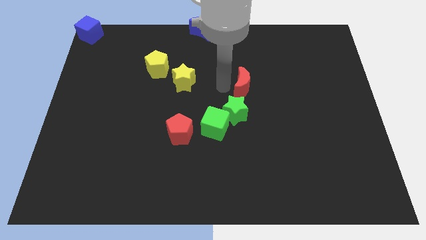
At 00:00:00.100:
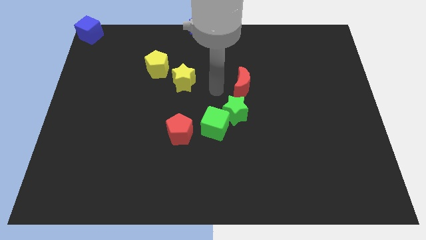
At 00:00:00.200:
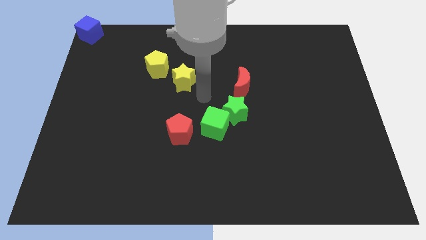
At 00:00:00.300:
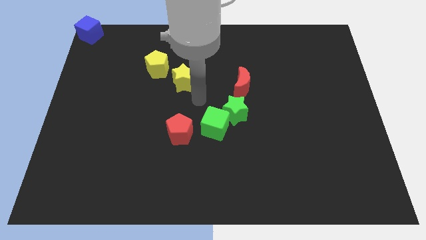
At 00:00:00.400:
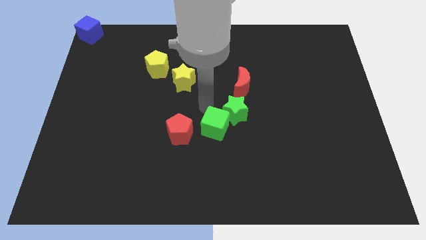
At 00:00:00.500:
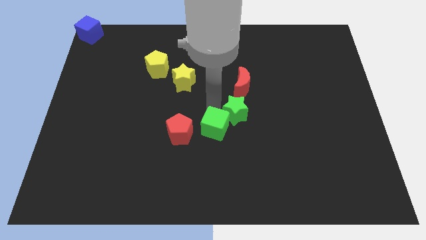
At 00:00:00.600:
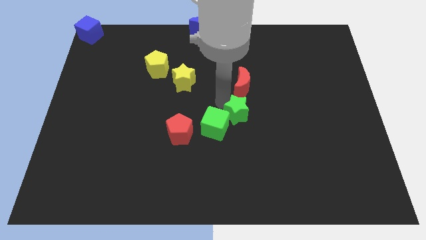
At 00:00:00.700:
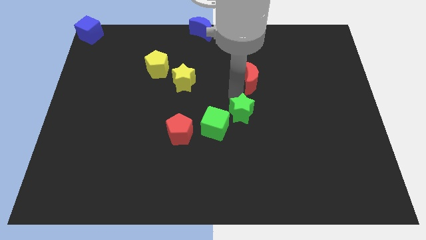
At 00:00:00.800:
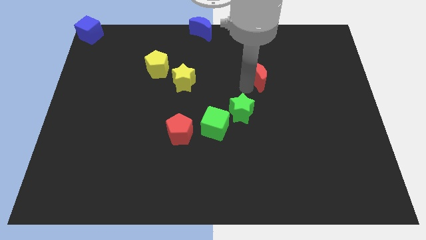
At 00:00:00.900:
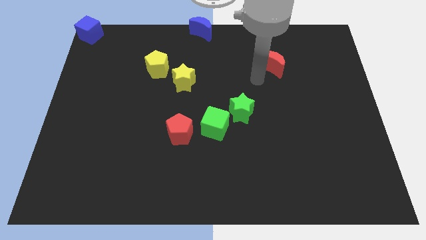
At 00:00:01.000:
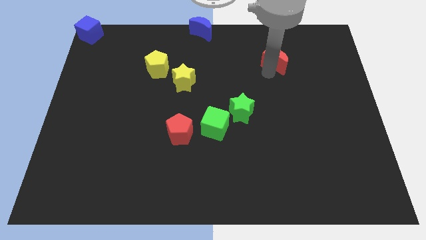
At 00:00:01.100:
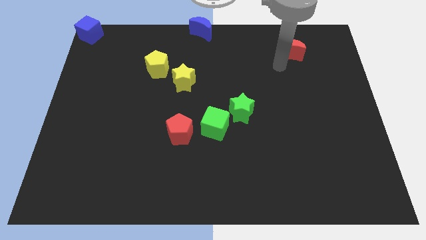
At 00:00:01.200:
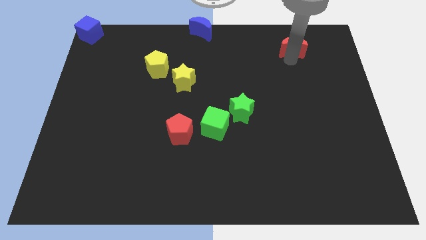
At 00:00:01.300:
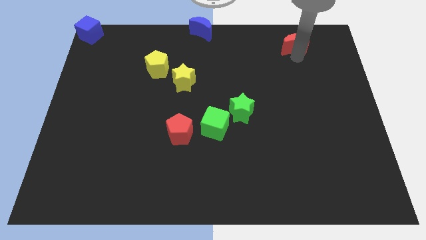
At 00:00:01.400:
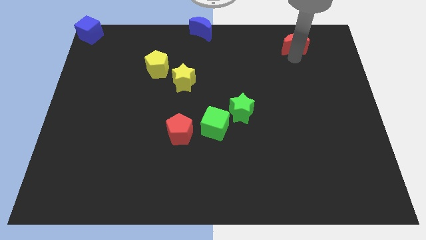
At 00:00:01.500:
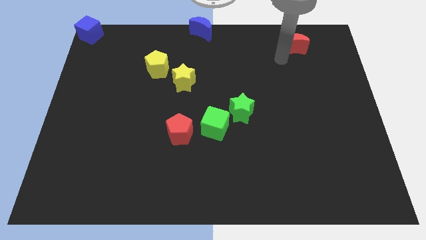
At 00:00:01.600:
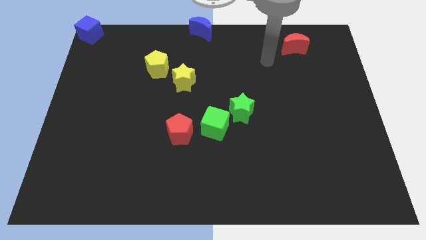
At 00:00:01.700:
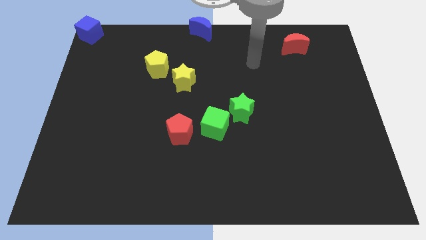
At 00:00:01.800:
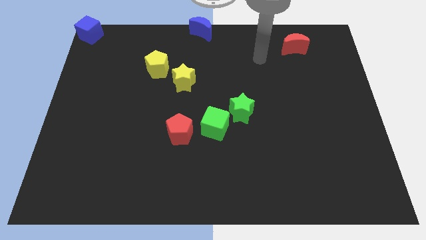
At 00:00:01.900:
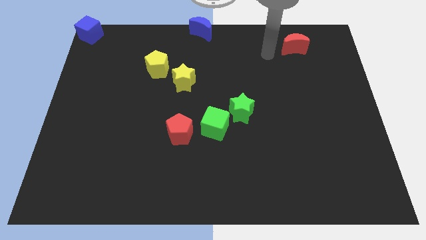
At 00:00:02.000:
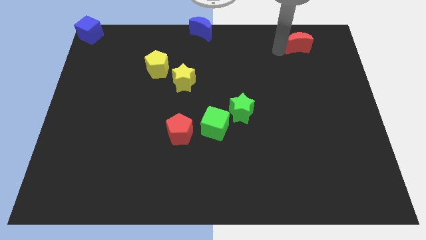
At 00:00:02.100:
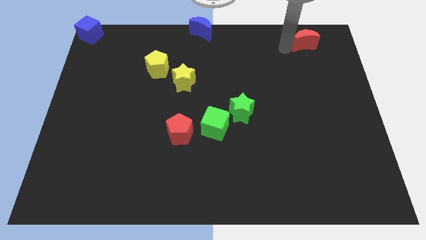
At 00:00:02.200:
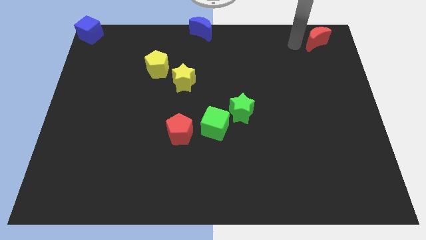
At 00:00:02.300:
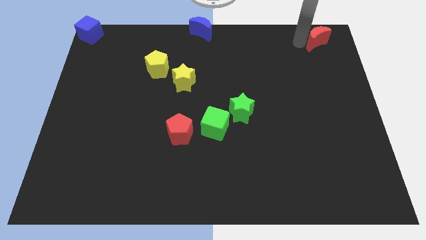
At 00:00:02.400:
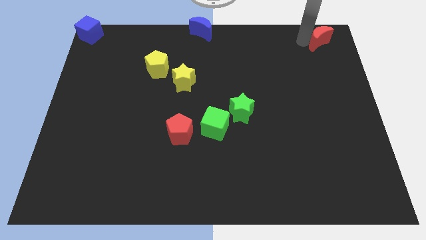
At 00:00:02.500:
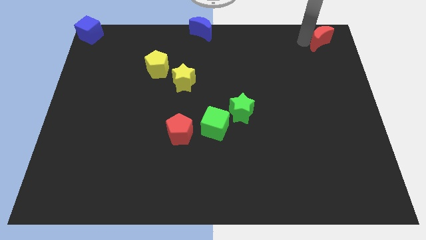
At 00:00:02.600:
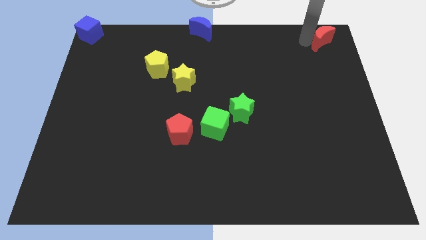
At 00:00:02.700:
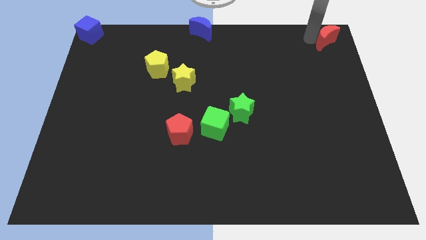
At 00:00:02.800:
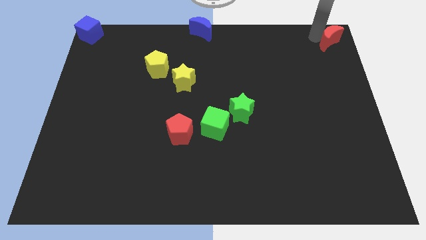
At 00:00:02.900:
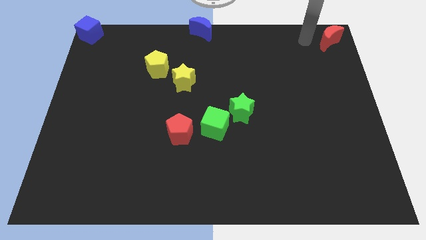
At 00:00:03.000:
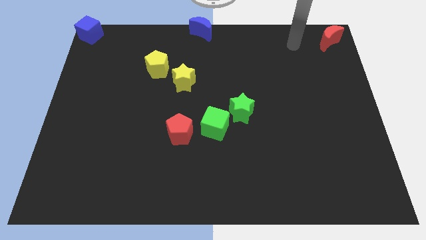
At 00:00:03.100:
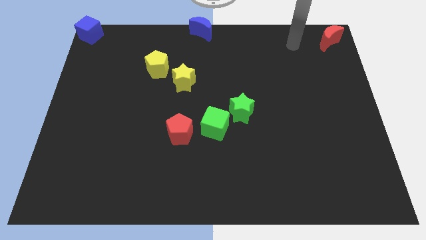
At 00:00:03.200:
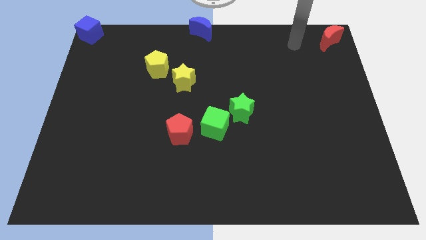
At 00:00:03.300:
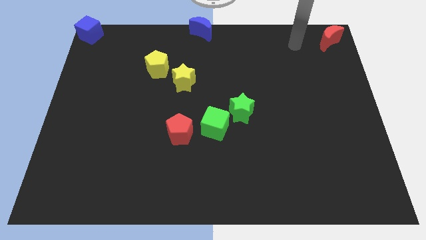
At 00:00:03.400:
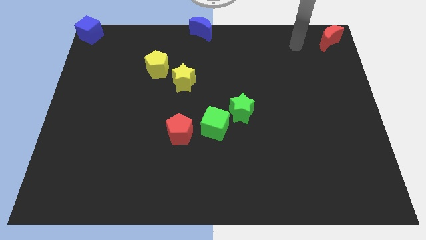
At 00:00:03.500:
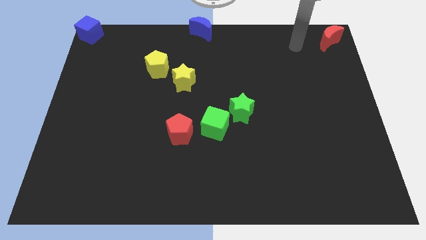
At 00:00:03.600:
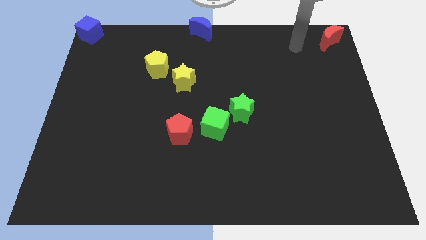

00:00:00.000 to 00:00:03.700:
separate the green star and red moon

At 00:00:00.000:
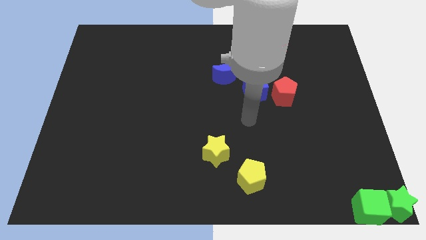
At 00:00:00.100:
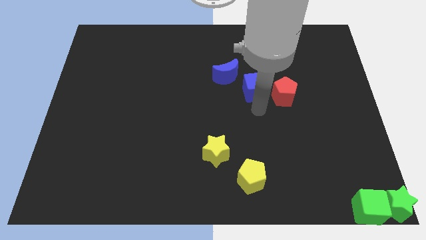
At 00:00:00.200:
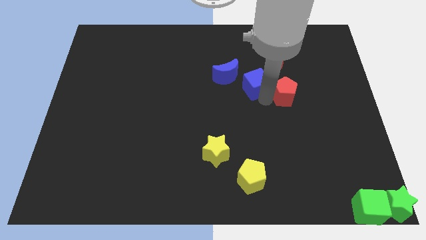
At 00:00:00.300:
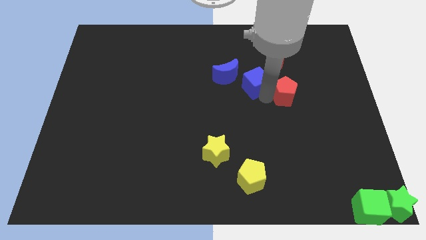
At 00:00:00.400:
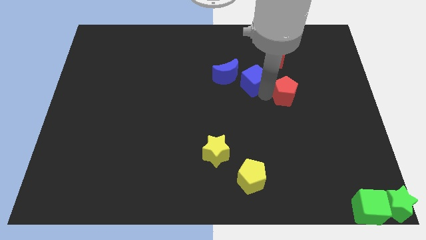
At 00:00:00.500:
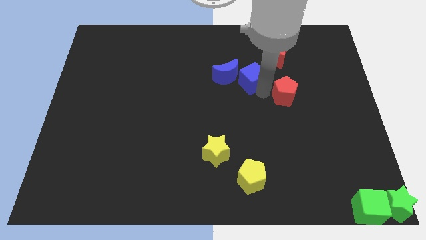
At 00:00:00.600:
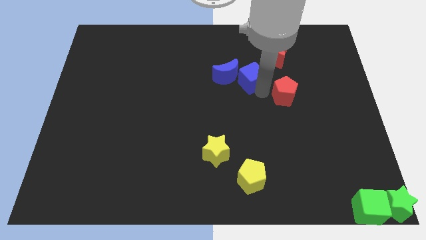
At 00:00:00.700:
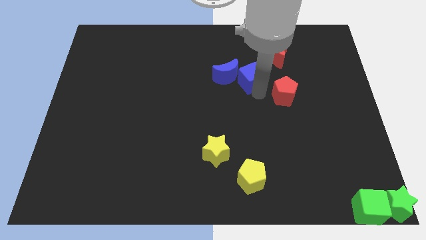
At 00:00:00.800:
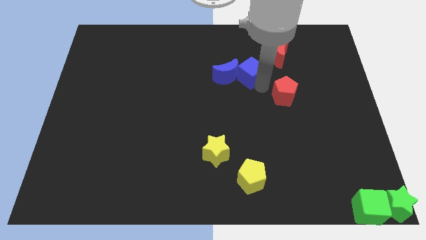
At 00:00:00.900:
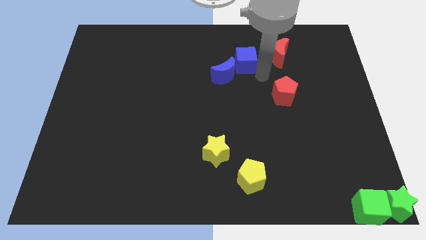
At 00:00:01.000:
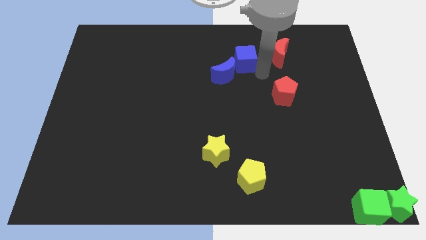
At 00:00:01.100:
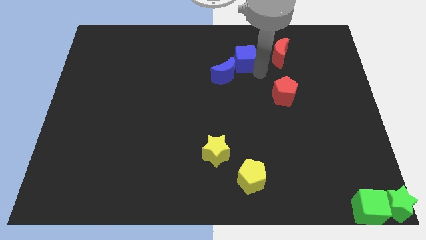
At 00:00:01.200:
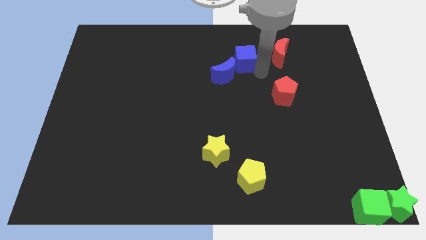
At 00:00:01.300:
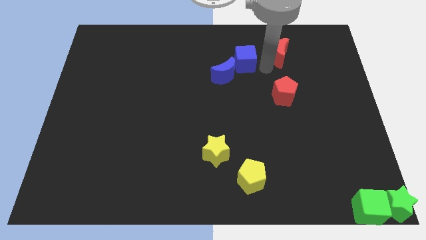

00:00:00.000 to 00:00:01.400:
move blue cube to the top right of blue moon

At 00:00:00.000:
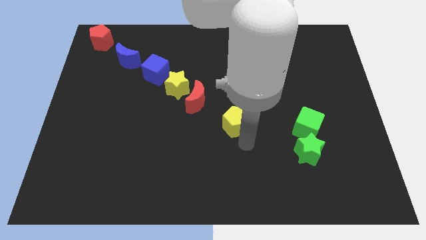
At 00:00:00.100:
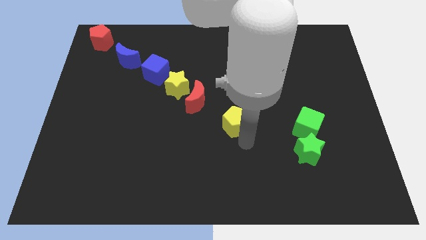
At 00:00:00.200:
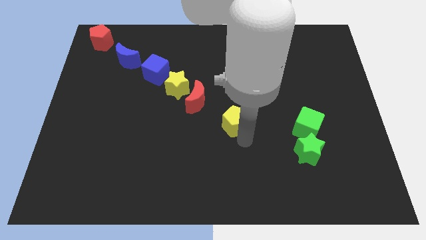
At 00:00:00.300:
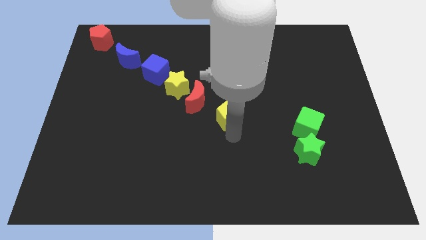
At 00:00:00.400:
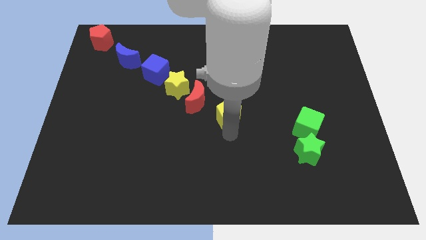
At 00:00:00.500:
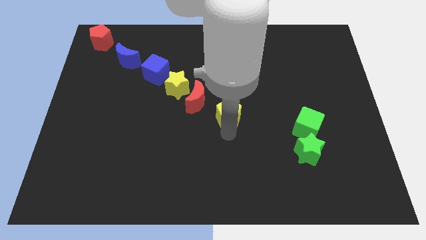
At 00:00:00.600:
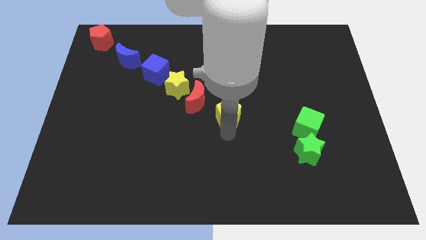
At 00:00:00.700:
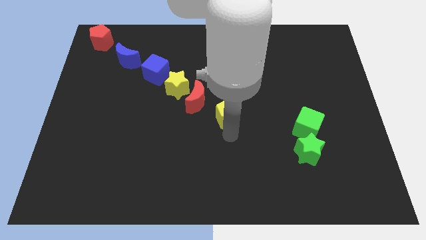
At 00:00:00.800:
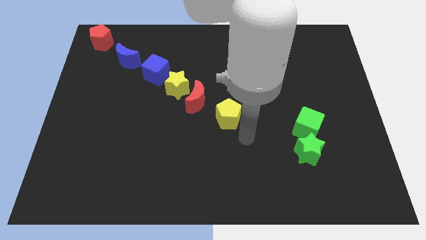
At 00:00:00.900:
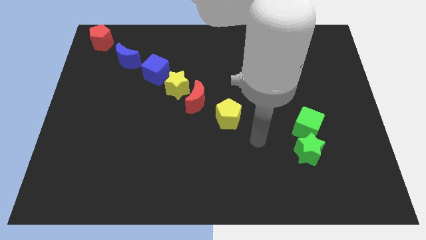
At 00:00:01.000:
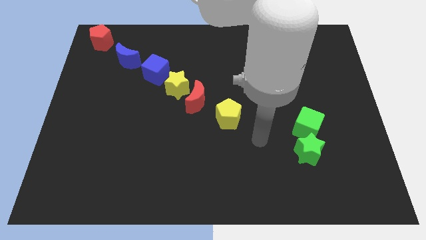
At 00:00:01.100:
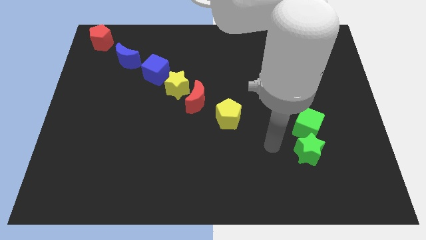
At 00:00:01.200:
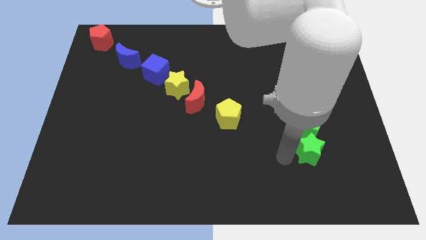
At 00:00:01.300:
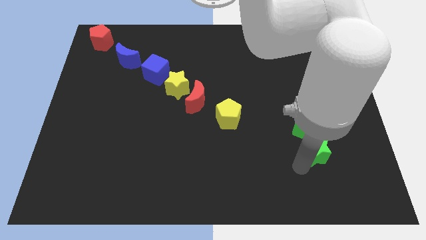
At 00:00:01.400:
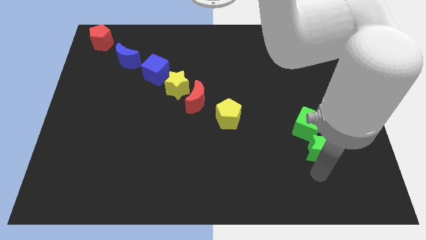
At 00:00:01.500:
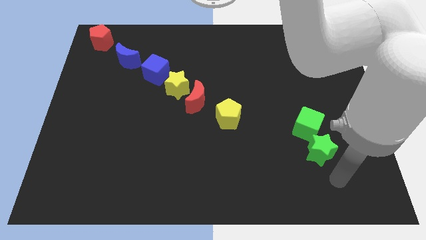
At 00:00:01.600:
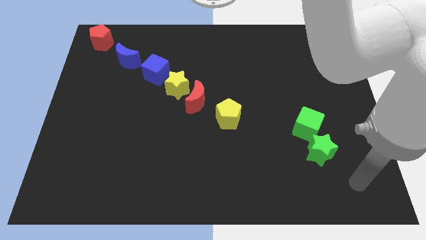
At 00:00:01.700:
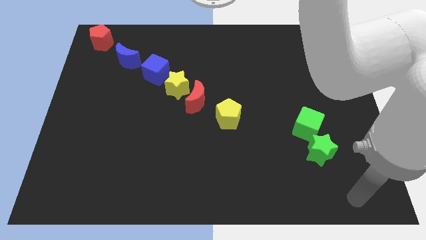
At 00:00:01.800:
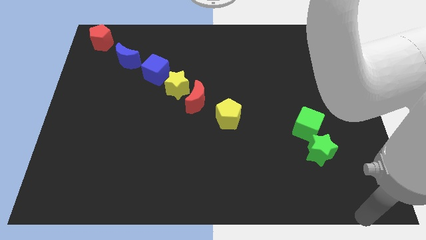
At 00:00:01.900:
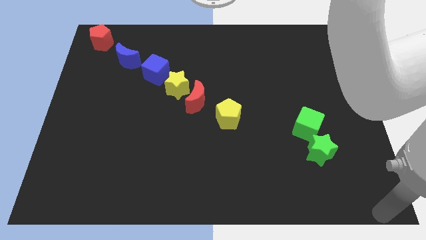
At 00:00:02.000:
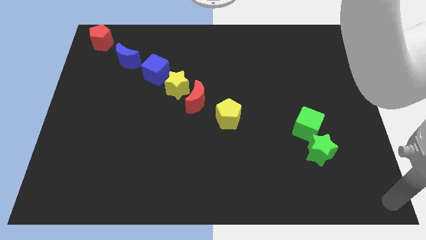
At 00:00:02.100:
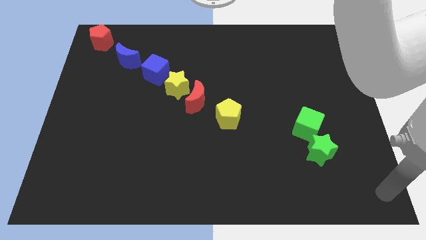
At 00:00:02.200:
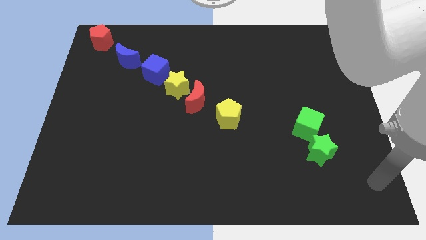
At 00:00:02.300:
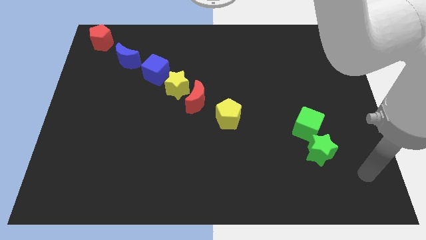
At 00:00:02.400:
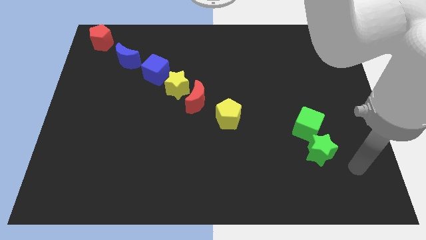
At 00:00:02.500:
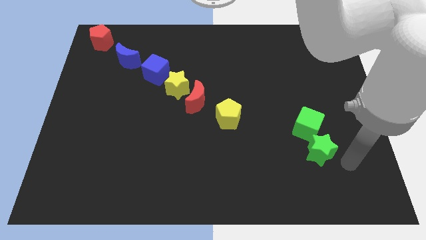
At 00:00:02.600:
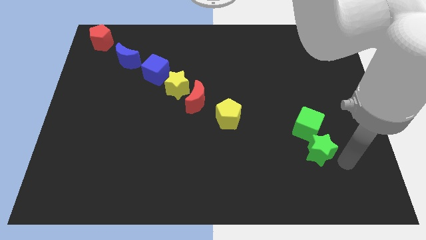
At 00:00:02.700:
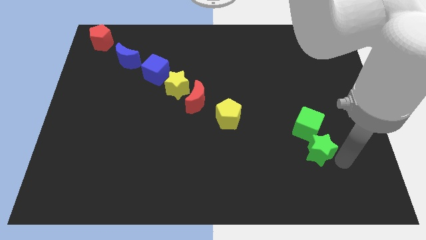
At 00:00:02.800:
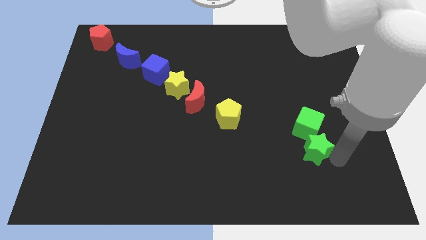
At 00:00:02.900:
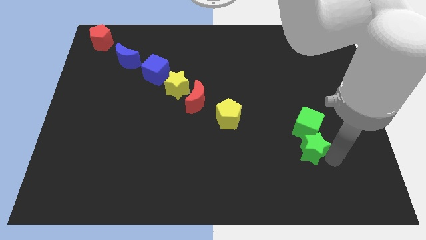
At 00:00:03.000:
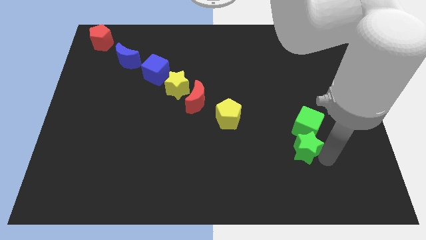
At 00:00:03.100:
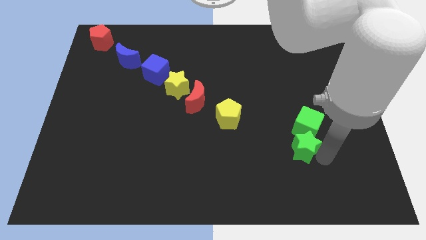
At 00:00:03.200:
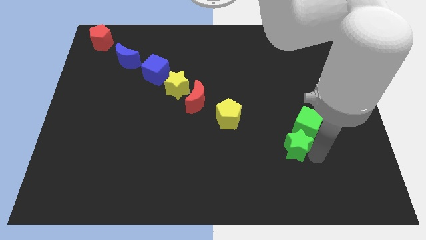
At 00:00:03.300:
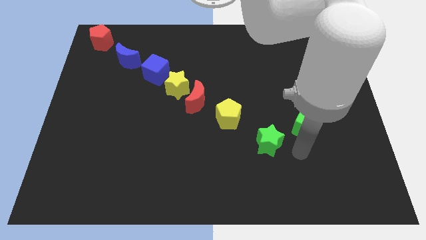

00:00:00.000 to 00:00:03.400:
move the yellow pentagon to the bottom right side of the yellow pentagon

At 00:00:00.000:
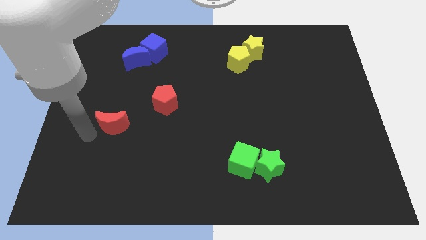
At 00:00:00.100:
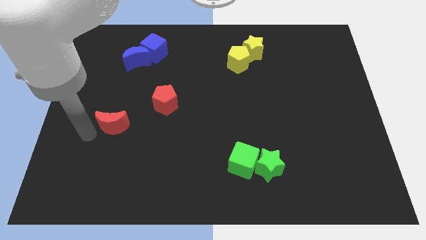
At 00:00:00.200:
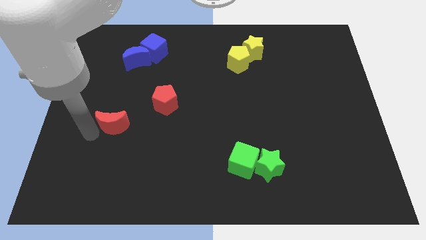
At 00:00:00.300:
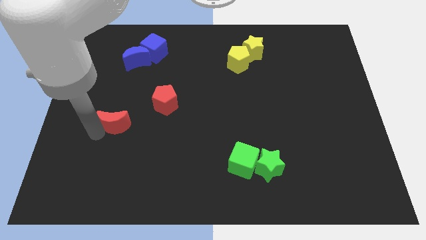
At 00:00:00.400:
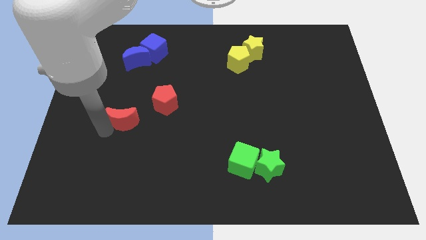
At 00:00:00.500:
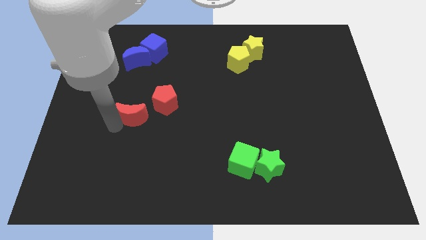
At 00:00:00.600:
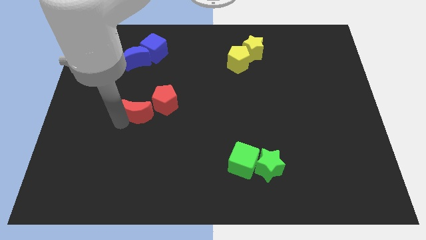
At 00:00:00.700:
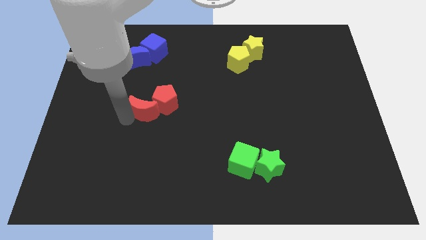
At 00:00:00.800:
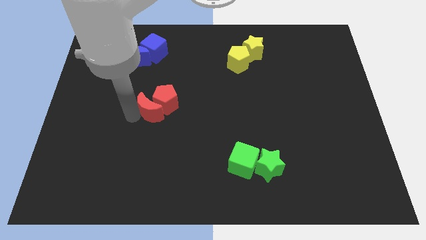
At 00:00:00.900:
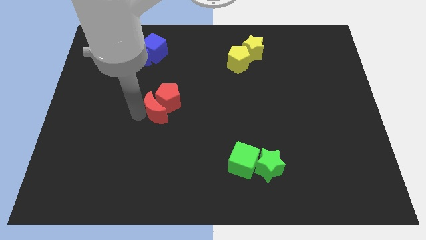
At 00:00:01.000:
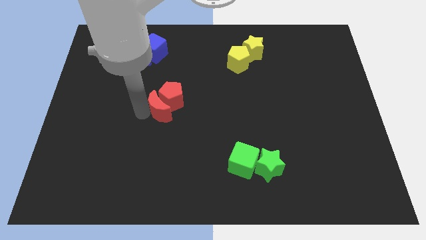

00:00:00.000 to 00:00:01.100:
push the red crescent into the red pentagon
